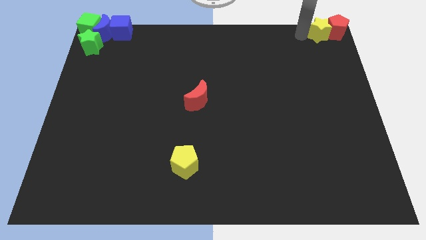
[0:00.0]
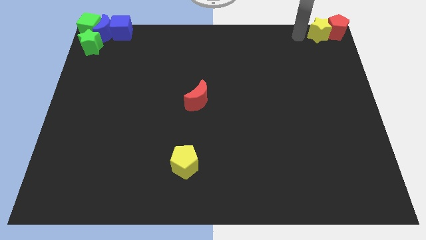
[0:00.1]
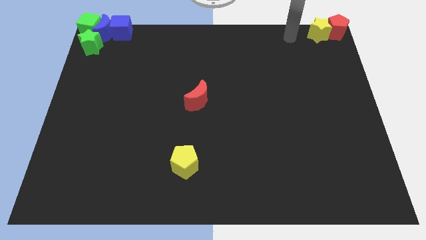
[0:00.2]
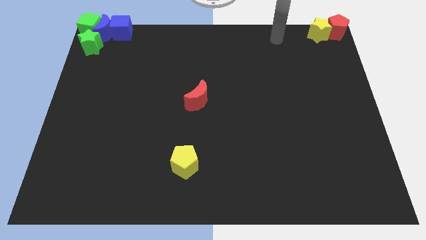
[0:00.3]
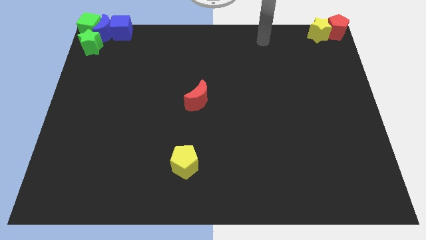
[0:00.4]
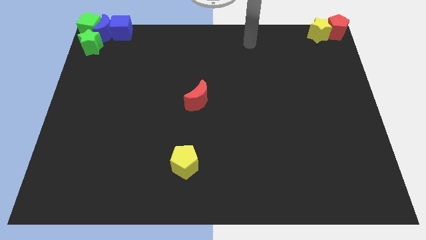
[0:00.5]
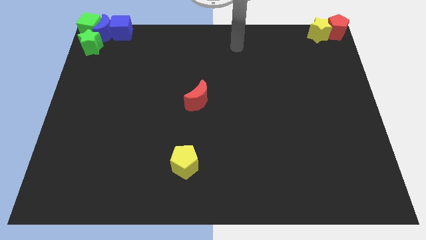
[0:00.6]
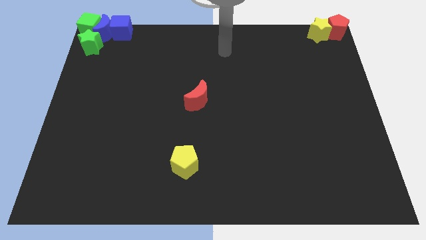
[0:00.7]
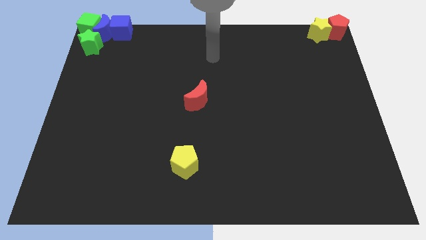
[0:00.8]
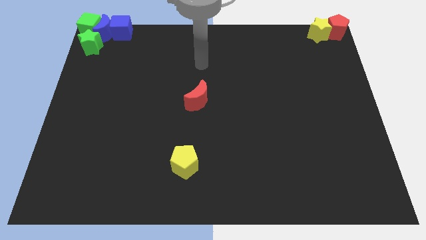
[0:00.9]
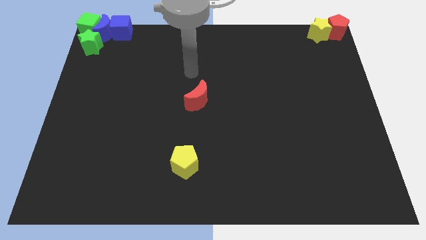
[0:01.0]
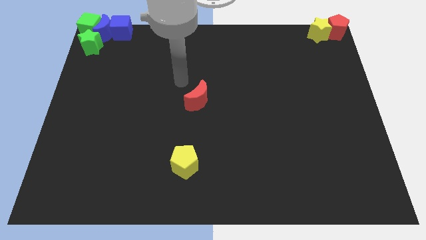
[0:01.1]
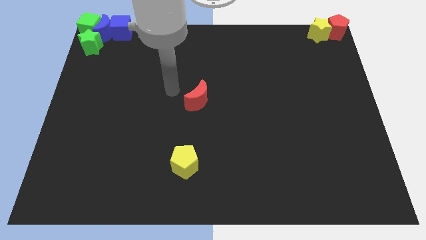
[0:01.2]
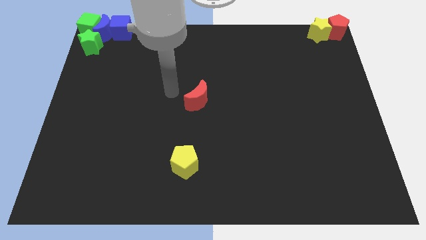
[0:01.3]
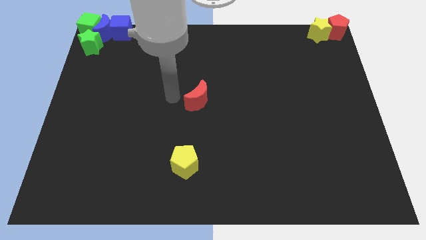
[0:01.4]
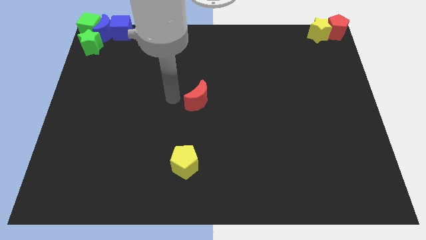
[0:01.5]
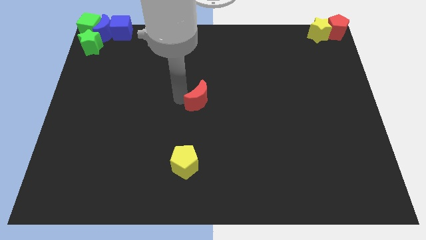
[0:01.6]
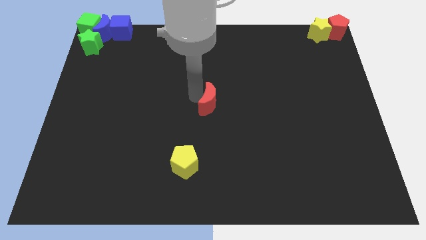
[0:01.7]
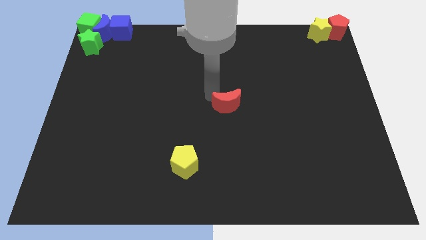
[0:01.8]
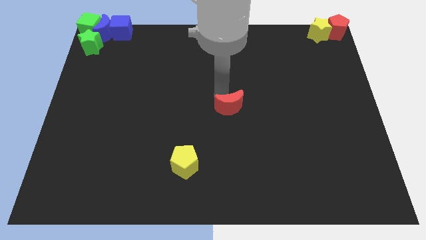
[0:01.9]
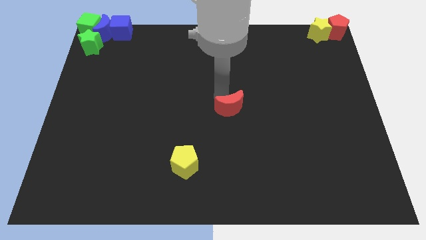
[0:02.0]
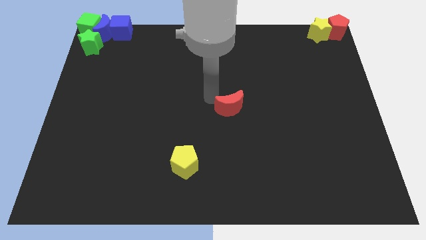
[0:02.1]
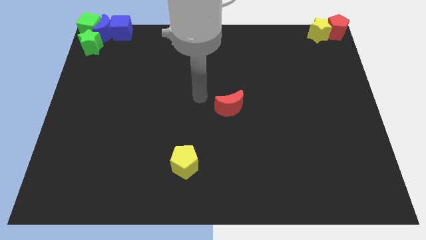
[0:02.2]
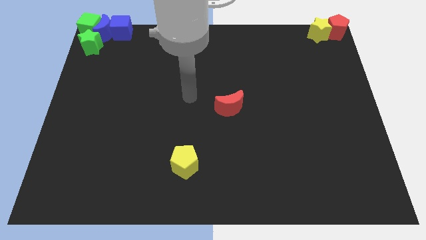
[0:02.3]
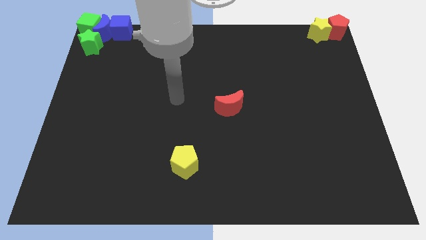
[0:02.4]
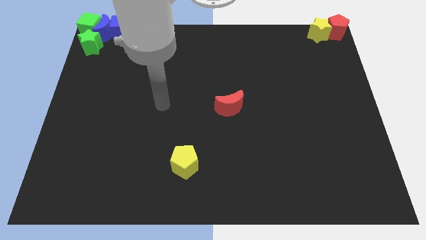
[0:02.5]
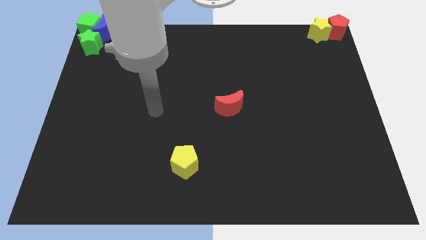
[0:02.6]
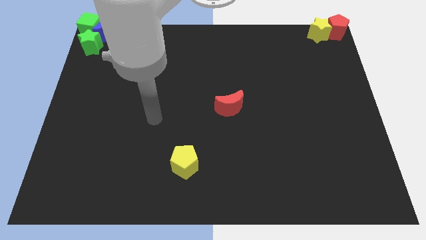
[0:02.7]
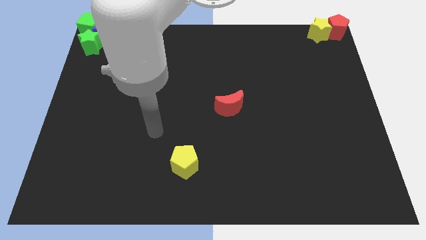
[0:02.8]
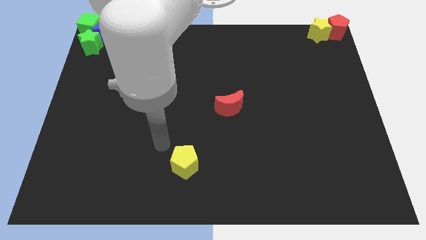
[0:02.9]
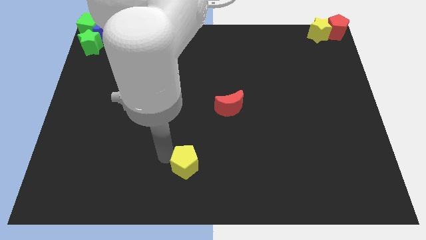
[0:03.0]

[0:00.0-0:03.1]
slide the red moon to the center of the board

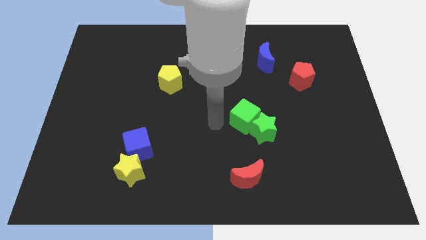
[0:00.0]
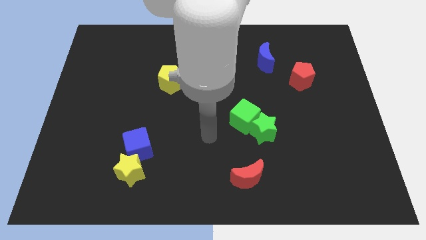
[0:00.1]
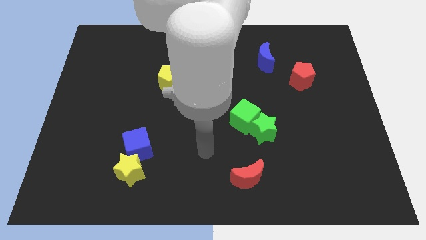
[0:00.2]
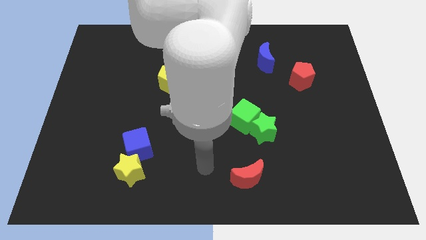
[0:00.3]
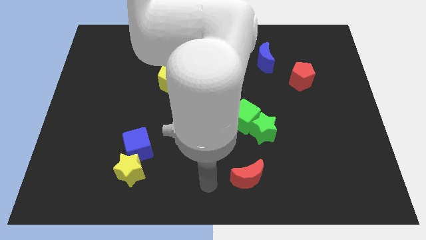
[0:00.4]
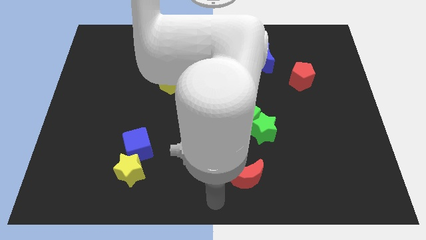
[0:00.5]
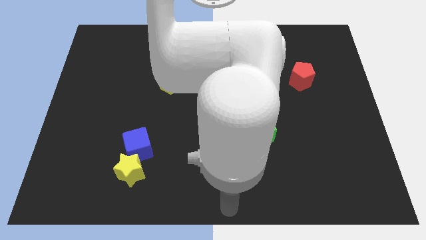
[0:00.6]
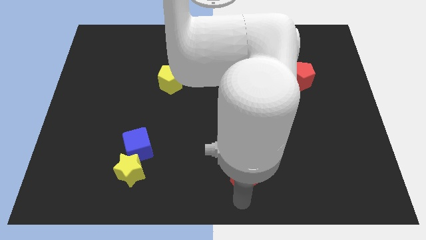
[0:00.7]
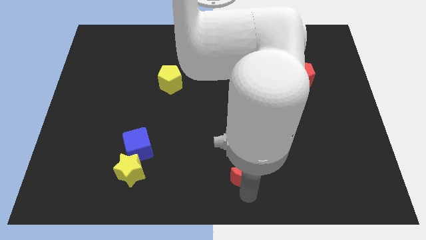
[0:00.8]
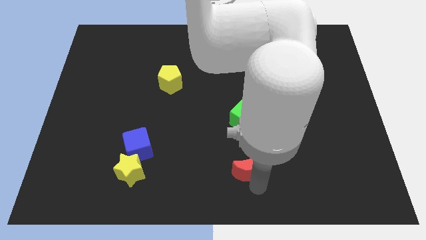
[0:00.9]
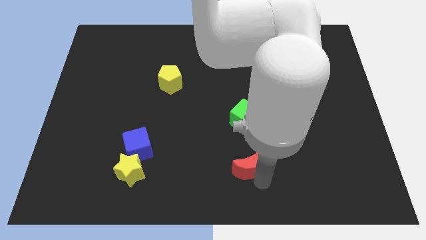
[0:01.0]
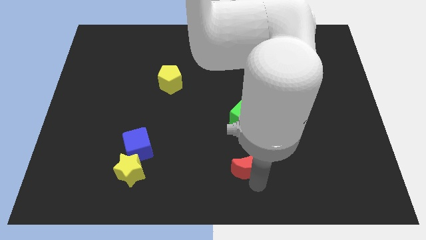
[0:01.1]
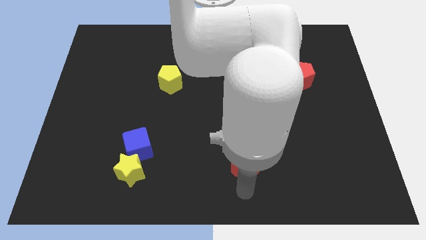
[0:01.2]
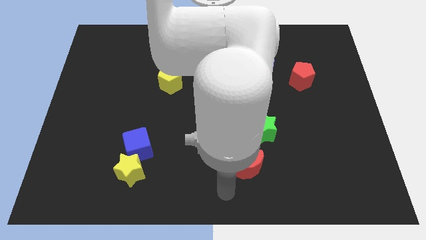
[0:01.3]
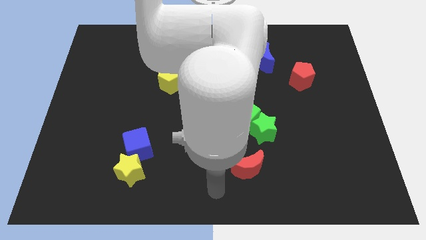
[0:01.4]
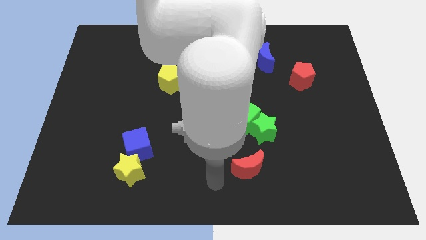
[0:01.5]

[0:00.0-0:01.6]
place the red crescent below the green star

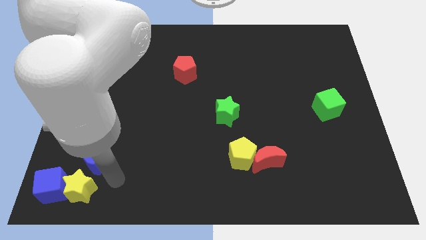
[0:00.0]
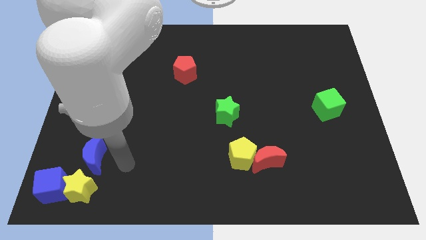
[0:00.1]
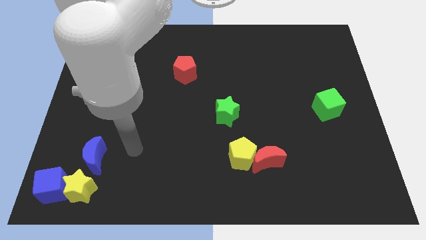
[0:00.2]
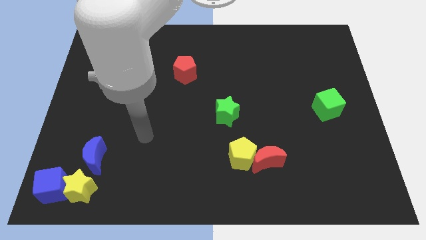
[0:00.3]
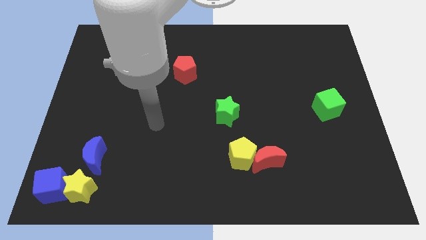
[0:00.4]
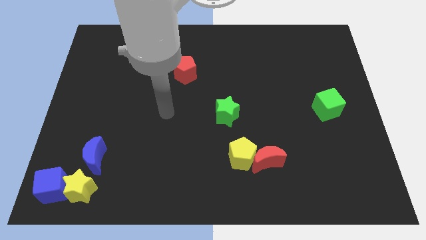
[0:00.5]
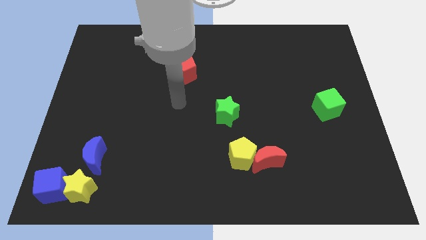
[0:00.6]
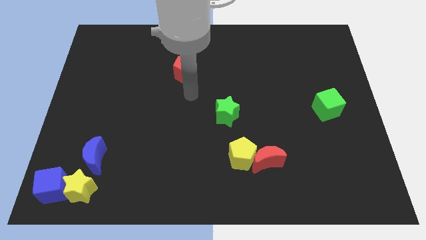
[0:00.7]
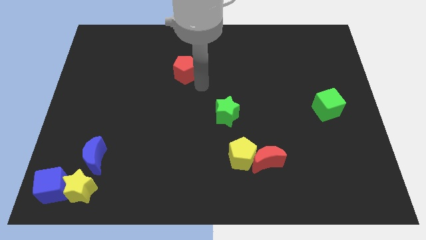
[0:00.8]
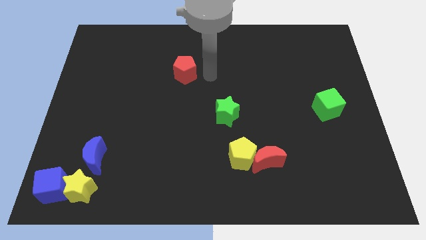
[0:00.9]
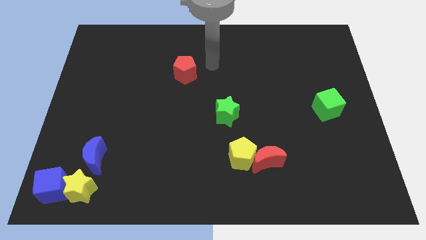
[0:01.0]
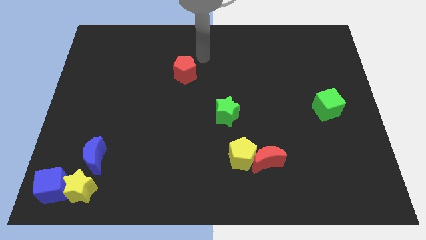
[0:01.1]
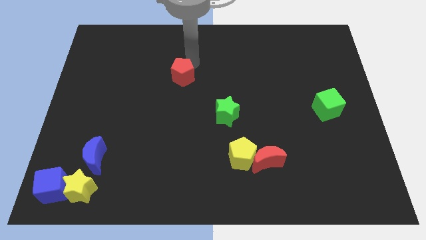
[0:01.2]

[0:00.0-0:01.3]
move your arm towards the red pentagon

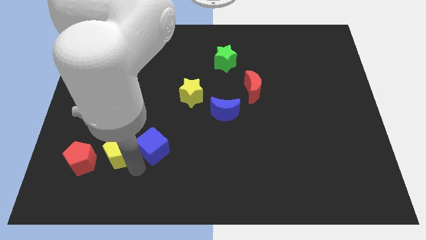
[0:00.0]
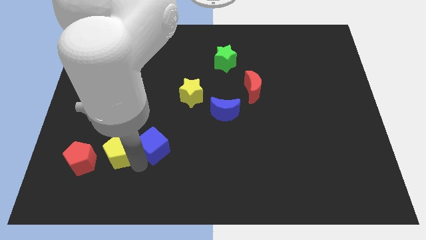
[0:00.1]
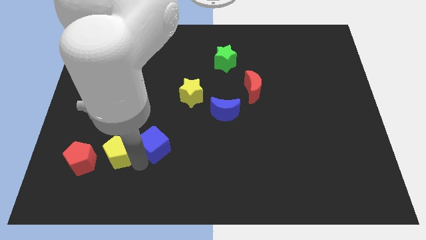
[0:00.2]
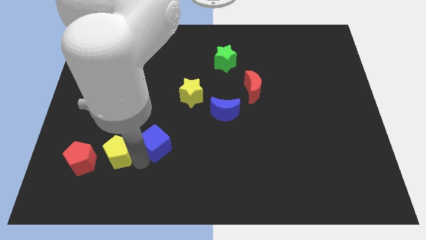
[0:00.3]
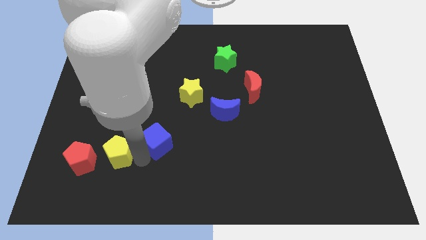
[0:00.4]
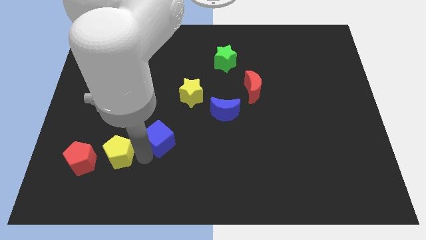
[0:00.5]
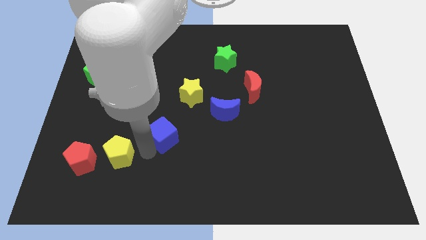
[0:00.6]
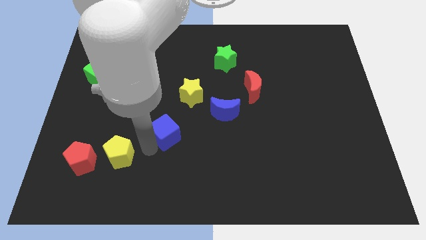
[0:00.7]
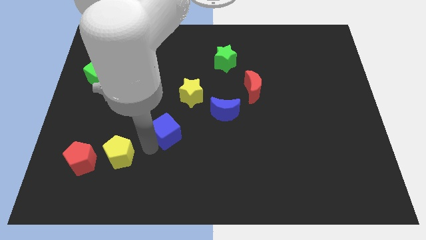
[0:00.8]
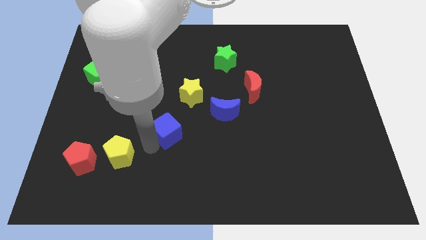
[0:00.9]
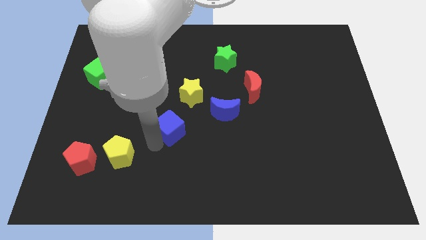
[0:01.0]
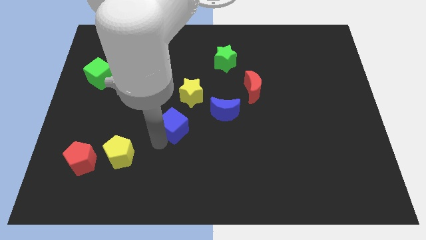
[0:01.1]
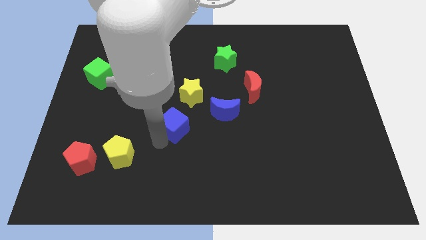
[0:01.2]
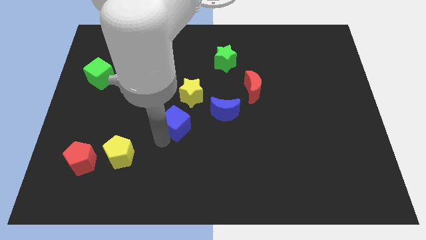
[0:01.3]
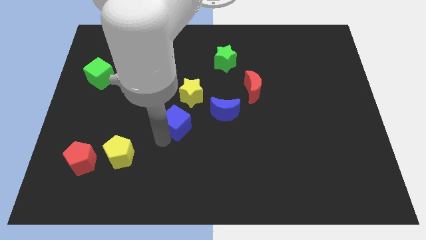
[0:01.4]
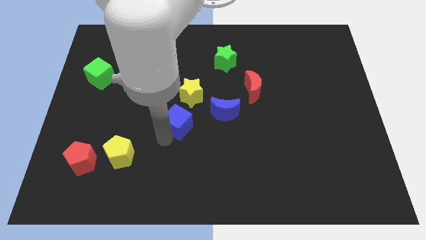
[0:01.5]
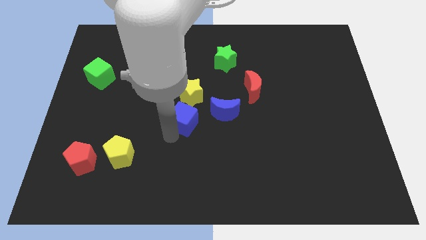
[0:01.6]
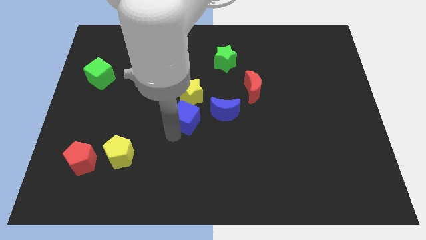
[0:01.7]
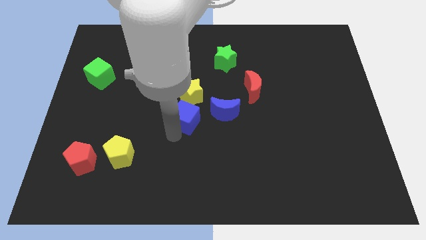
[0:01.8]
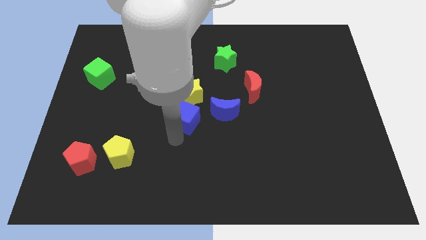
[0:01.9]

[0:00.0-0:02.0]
move the blue cube below to the yellow star

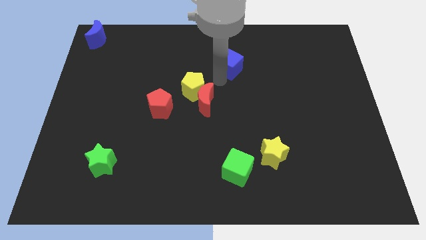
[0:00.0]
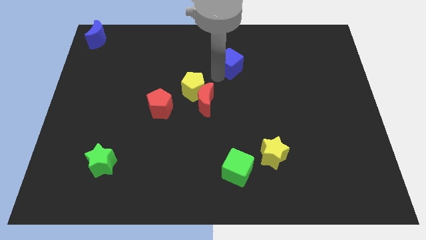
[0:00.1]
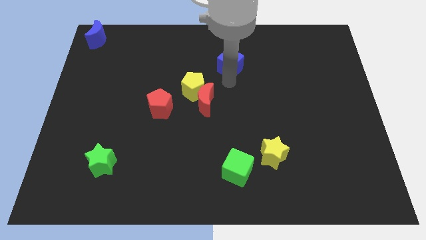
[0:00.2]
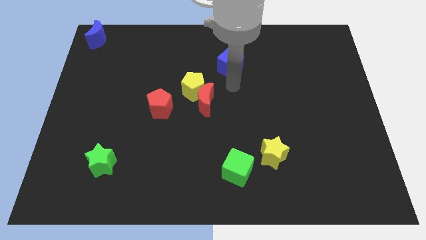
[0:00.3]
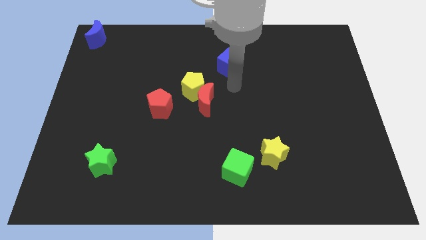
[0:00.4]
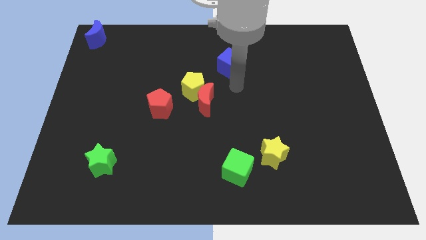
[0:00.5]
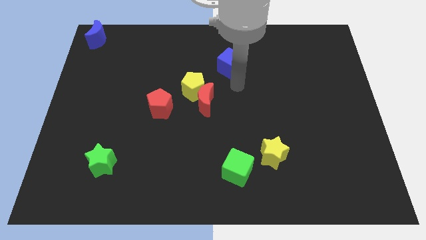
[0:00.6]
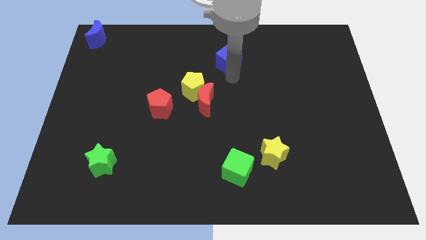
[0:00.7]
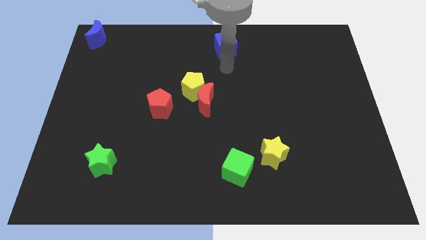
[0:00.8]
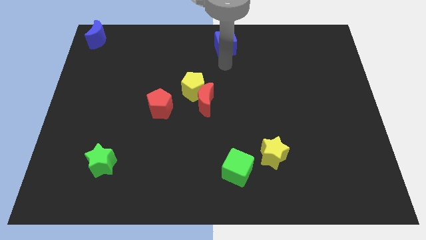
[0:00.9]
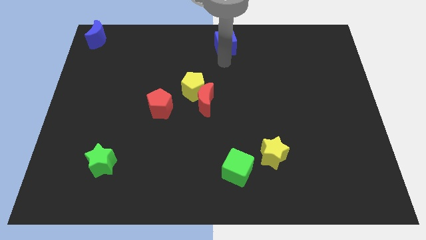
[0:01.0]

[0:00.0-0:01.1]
push the blue cube towards the top center of the board
